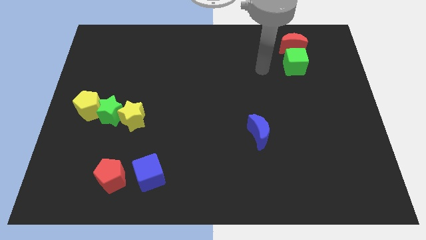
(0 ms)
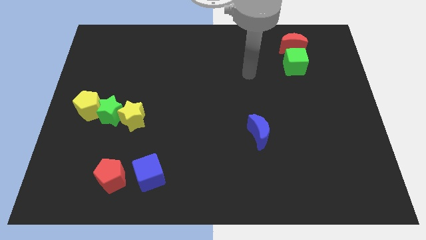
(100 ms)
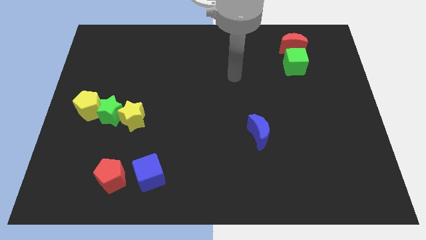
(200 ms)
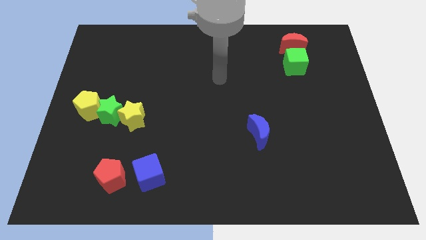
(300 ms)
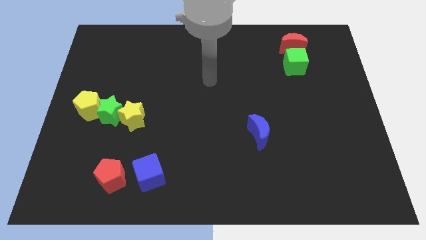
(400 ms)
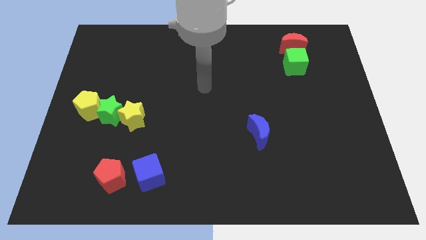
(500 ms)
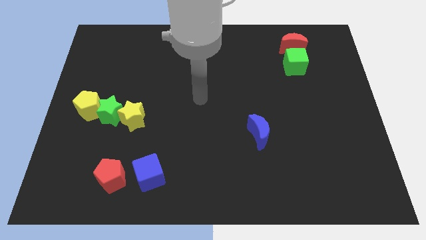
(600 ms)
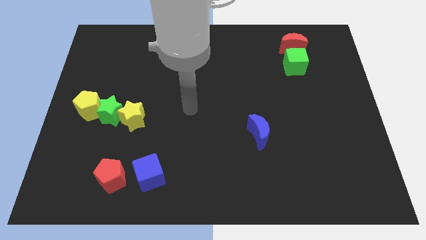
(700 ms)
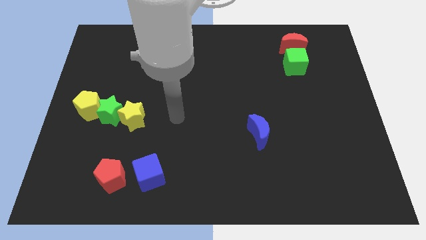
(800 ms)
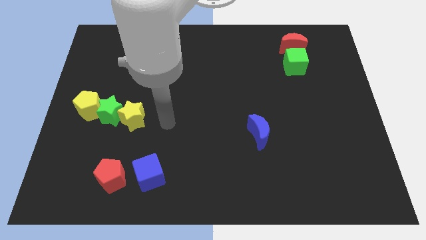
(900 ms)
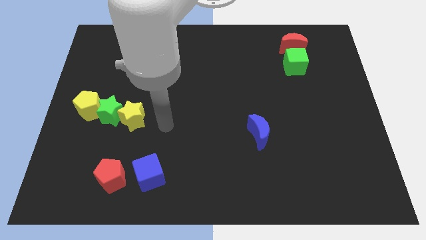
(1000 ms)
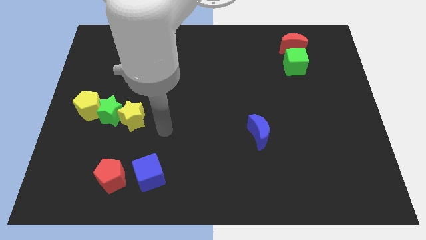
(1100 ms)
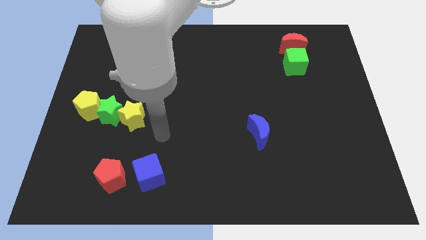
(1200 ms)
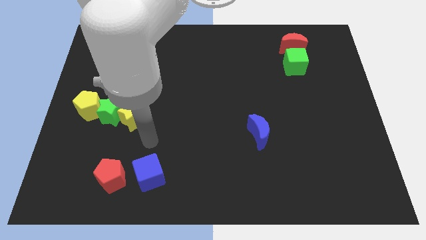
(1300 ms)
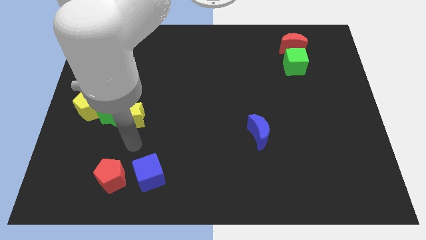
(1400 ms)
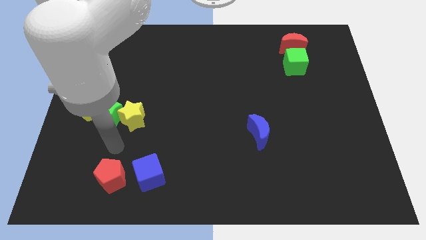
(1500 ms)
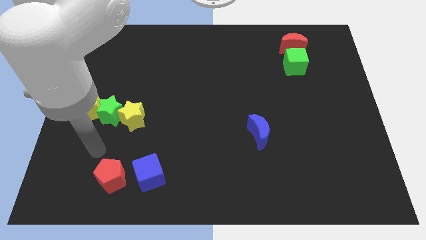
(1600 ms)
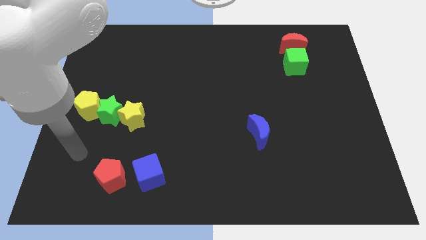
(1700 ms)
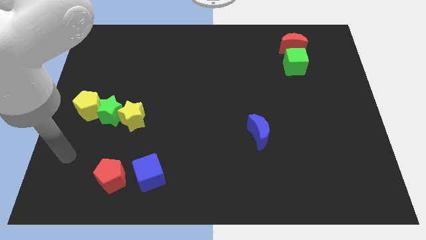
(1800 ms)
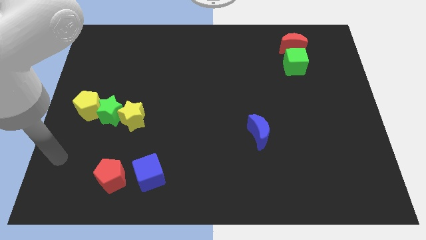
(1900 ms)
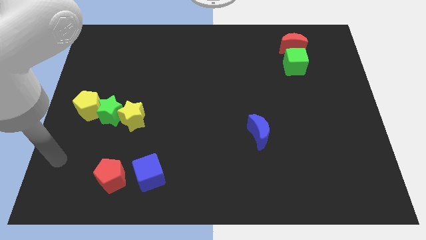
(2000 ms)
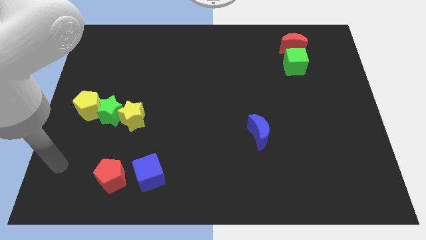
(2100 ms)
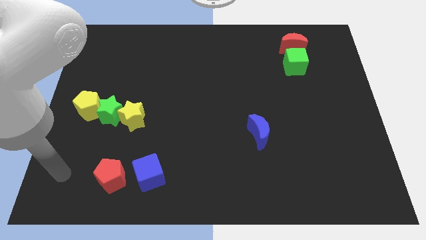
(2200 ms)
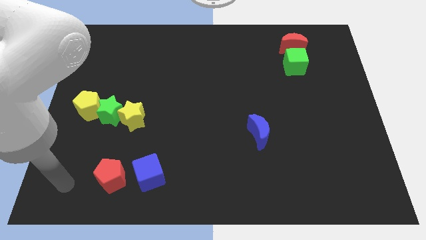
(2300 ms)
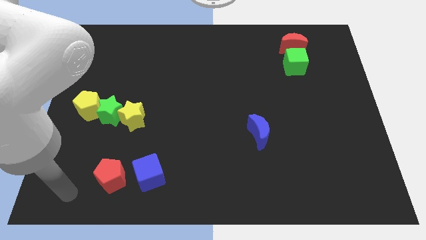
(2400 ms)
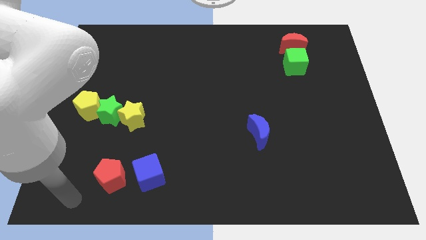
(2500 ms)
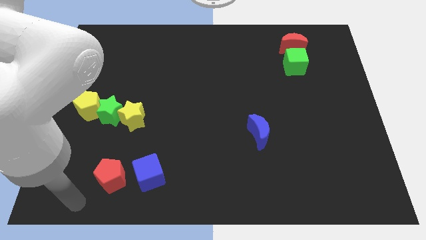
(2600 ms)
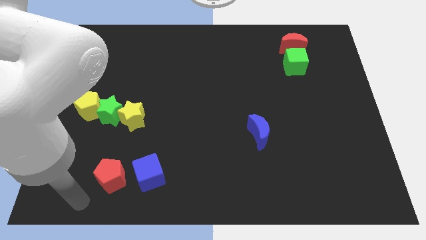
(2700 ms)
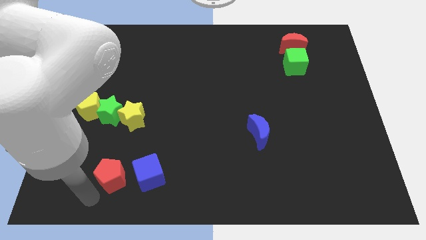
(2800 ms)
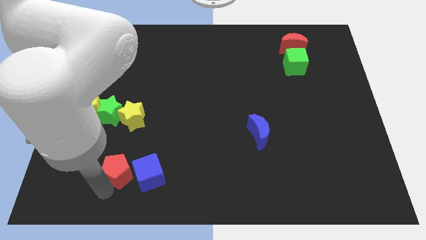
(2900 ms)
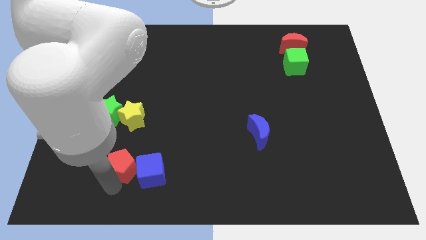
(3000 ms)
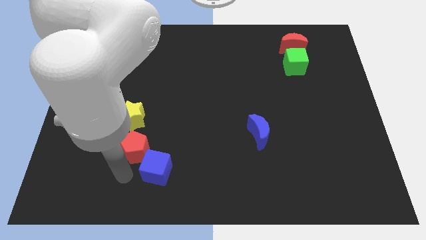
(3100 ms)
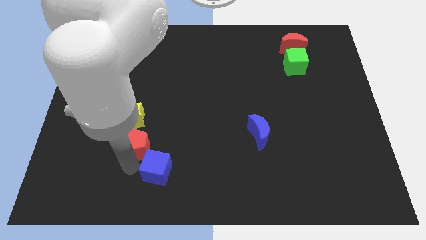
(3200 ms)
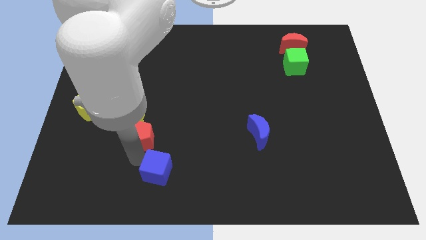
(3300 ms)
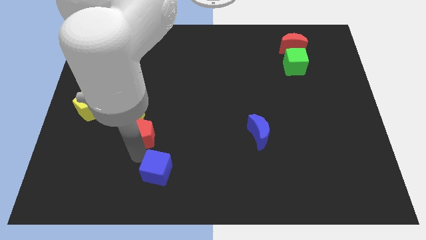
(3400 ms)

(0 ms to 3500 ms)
push the red pentagon to the top left of the blue cube

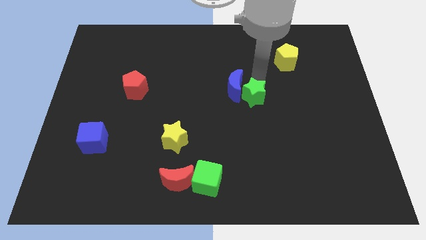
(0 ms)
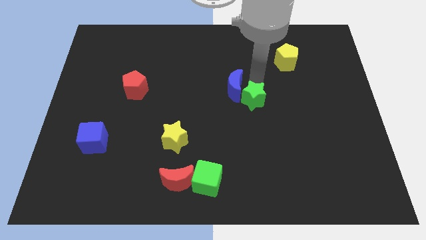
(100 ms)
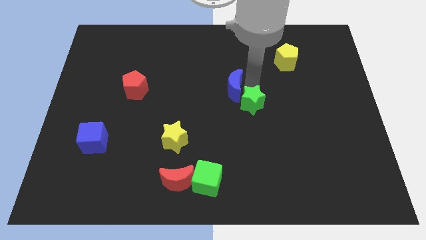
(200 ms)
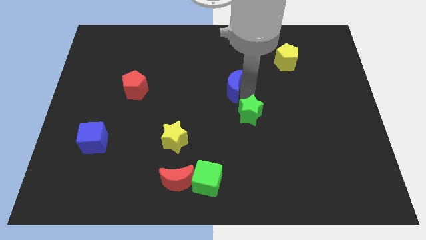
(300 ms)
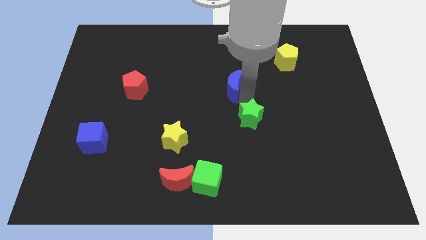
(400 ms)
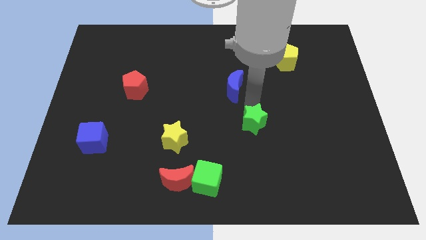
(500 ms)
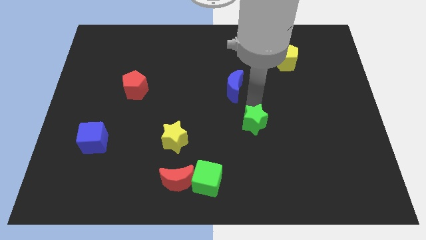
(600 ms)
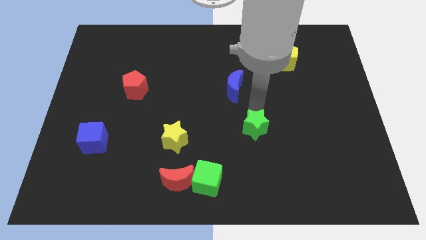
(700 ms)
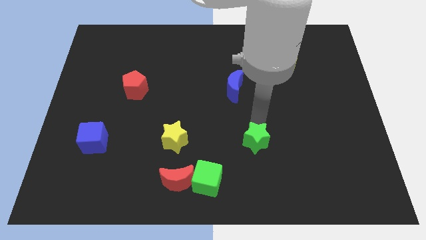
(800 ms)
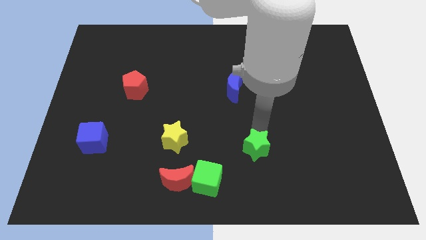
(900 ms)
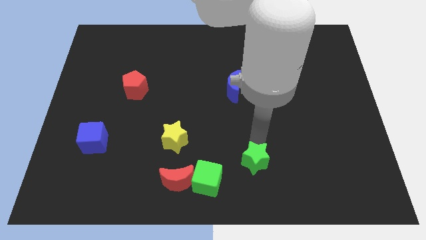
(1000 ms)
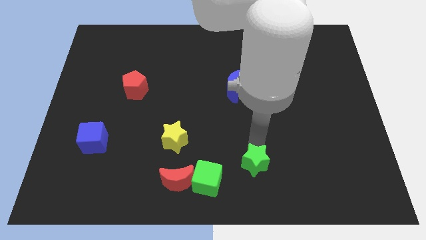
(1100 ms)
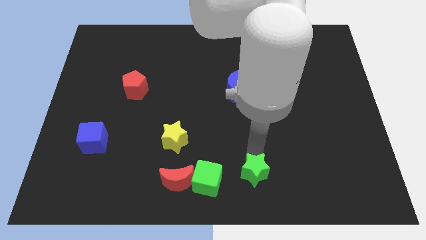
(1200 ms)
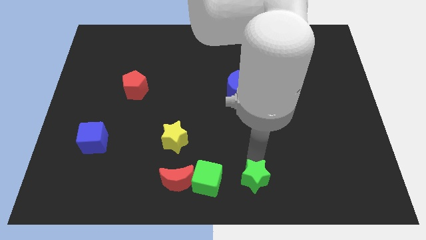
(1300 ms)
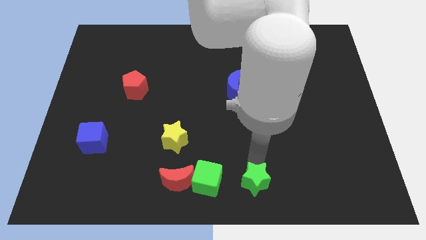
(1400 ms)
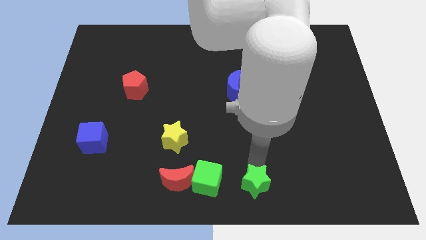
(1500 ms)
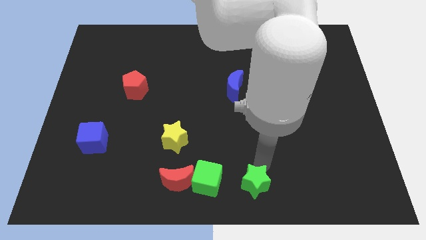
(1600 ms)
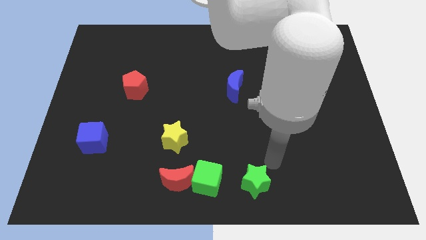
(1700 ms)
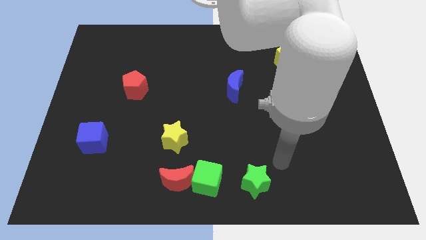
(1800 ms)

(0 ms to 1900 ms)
push the green star towards the bottom of the board

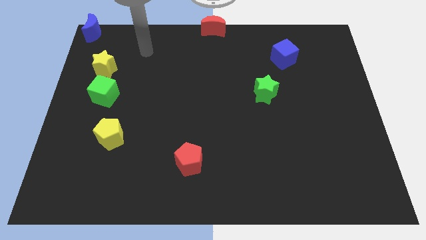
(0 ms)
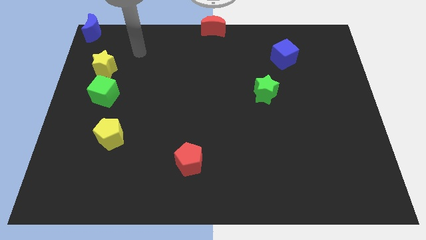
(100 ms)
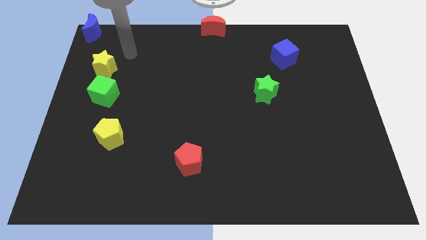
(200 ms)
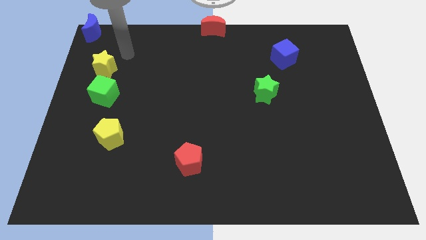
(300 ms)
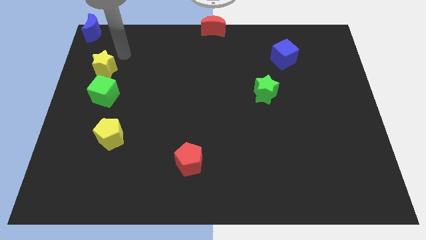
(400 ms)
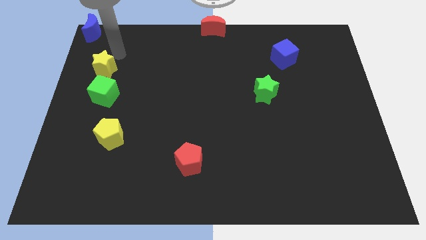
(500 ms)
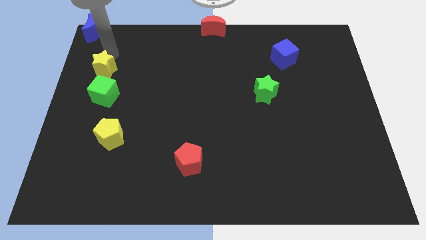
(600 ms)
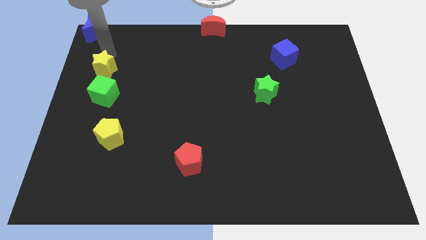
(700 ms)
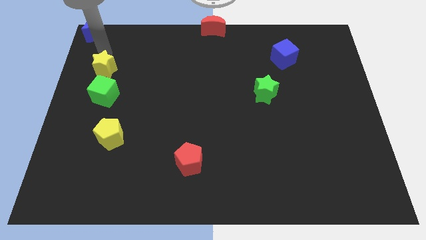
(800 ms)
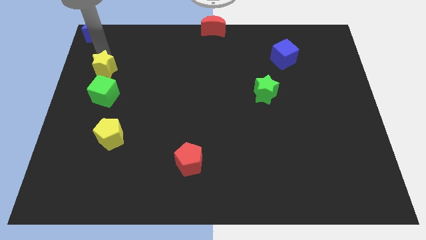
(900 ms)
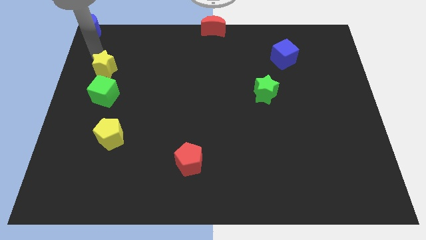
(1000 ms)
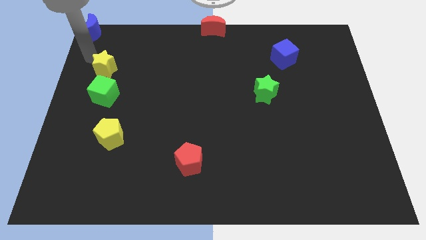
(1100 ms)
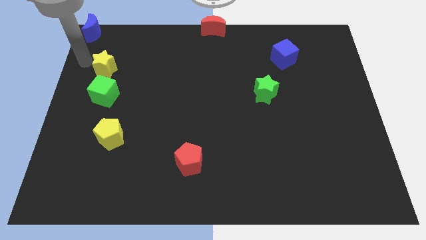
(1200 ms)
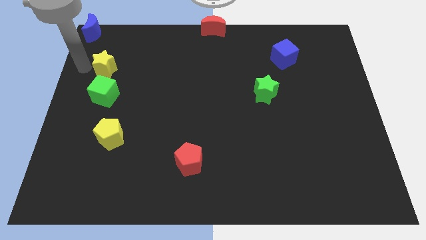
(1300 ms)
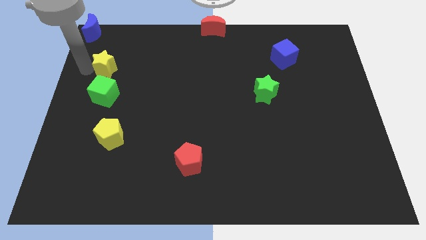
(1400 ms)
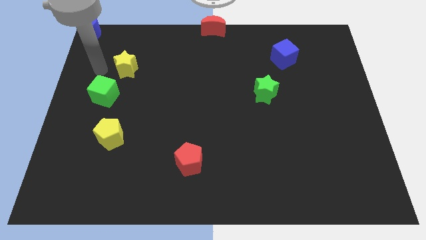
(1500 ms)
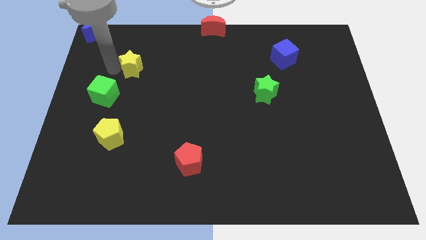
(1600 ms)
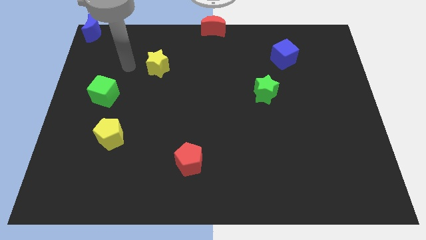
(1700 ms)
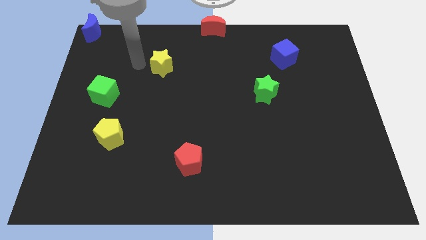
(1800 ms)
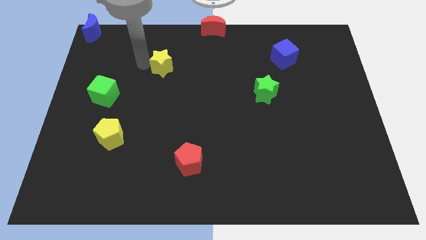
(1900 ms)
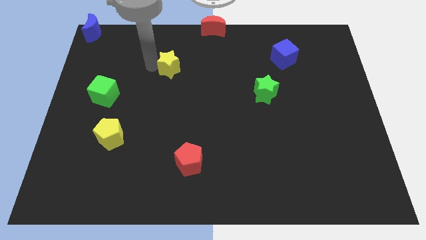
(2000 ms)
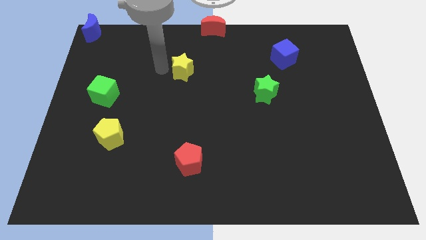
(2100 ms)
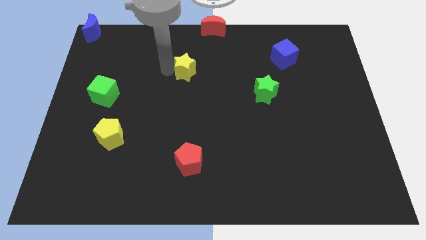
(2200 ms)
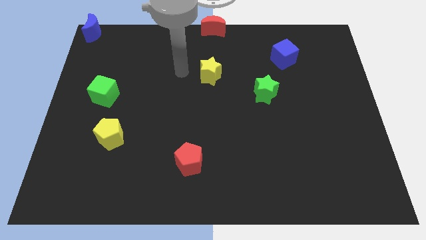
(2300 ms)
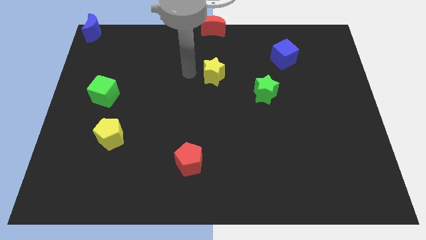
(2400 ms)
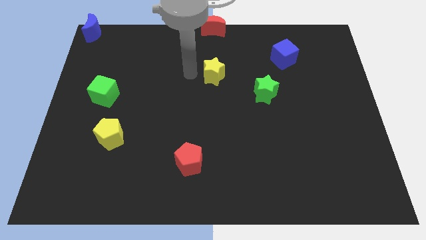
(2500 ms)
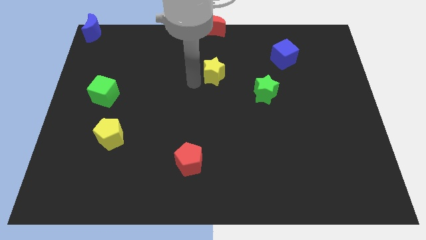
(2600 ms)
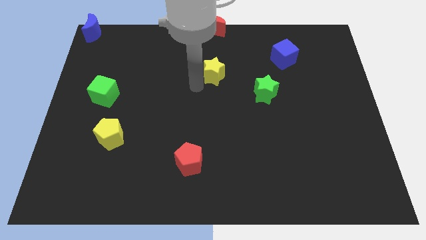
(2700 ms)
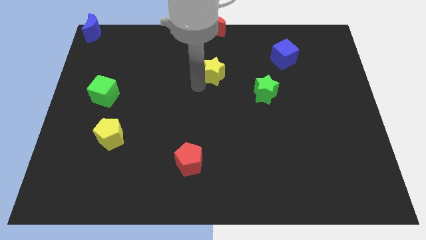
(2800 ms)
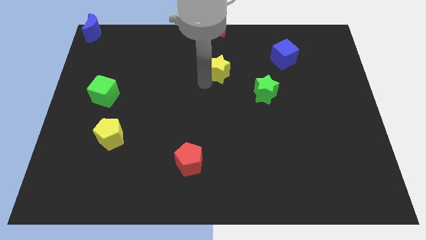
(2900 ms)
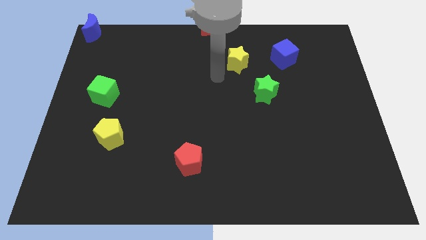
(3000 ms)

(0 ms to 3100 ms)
move yellow star towards blue cube

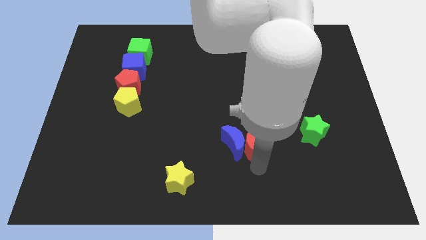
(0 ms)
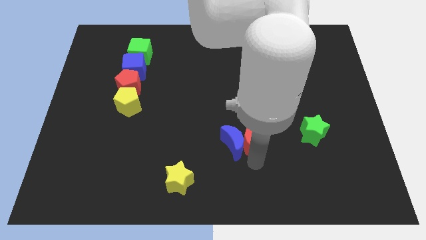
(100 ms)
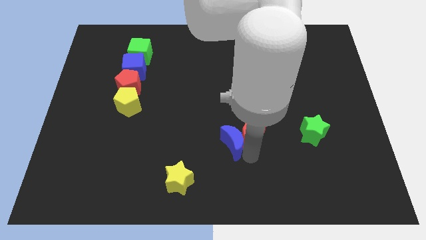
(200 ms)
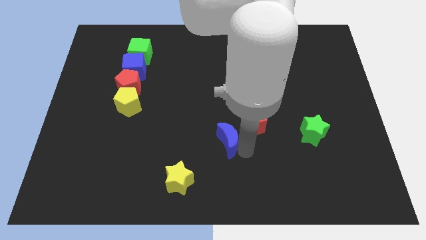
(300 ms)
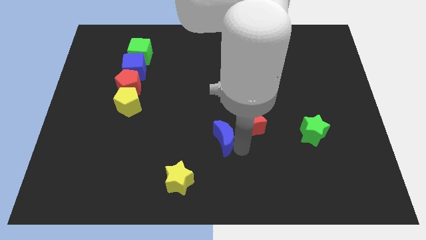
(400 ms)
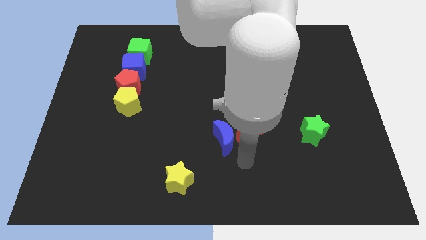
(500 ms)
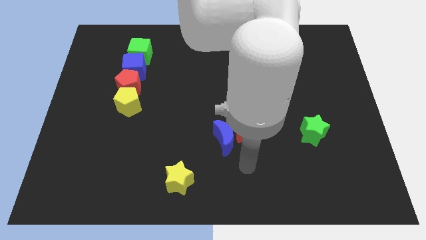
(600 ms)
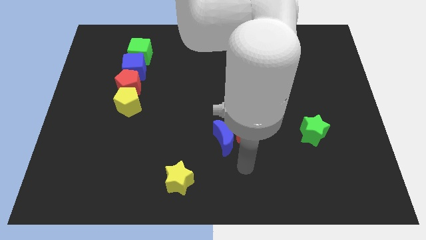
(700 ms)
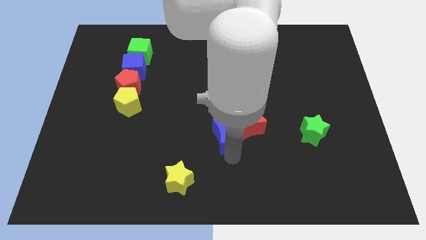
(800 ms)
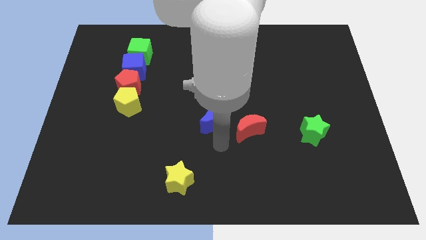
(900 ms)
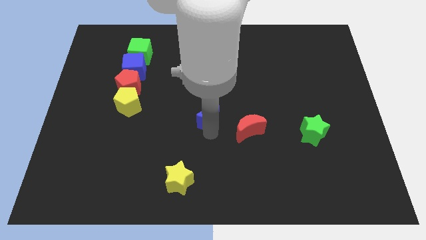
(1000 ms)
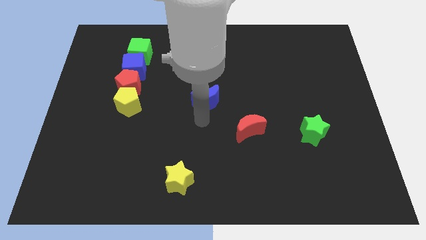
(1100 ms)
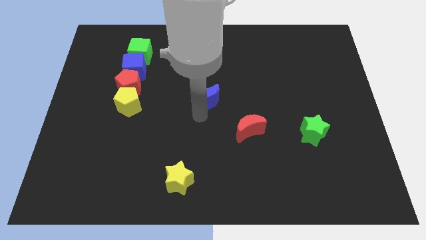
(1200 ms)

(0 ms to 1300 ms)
separate the red moon and blue moon
